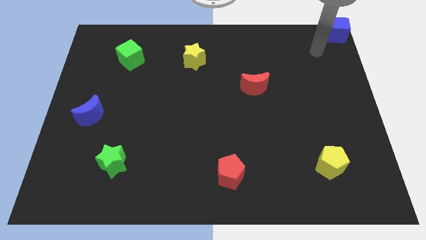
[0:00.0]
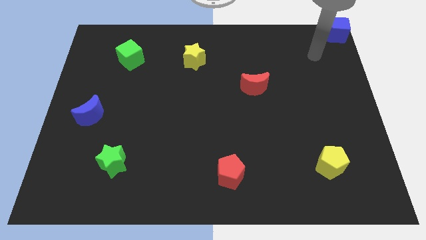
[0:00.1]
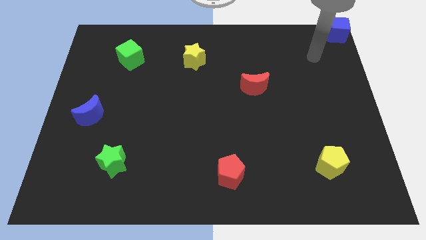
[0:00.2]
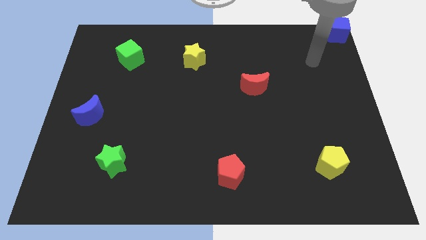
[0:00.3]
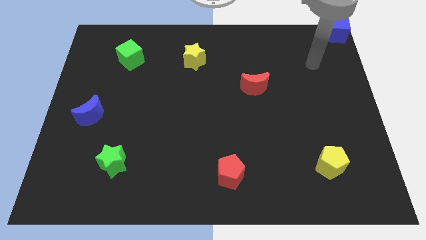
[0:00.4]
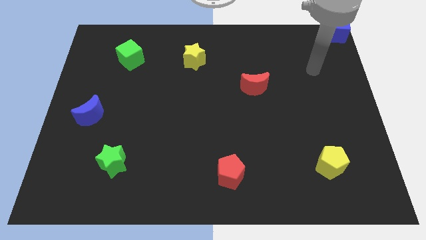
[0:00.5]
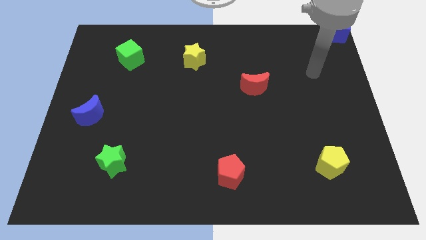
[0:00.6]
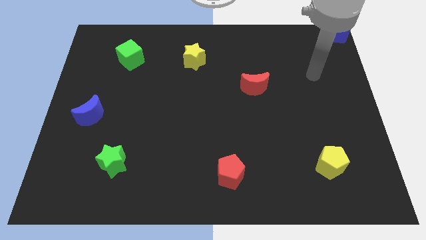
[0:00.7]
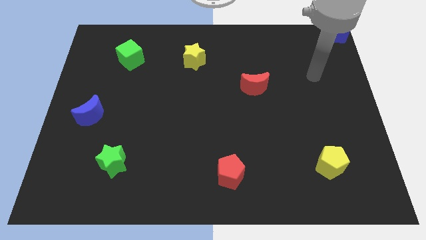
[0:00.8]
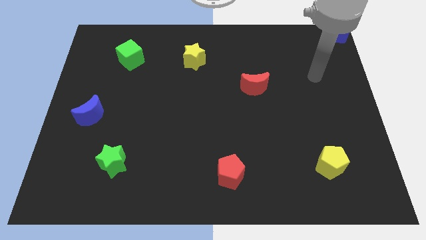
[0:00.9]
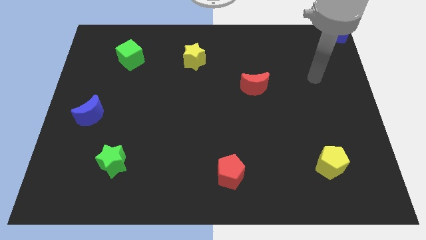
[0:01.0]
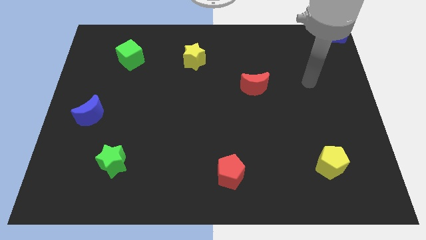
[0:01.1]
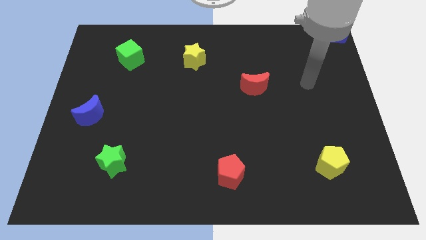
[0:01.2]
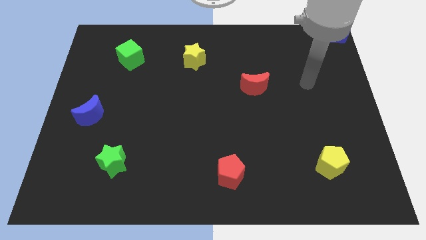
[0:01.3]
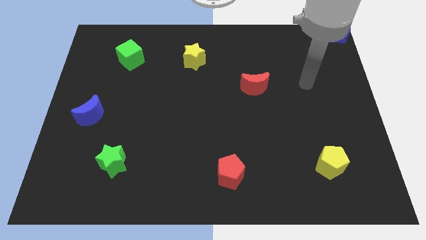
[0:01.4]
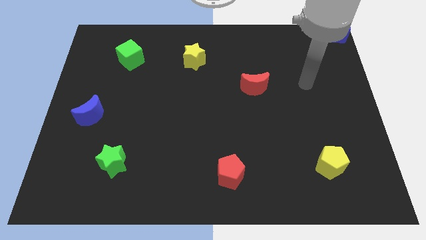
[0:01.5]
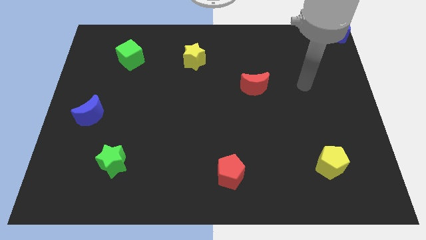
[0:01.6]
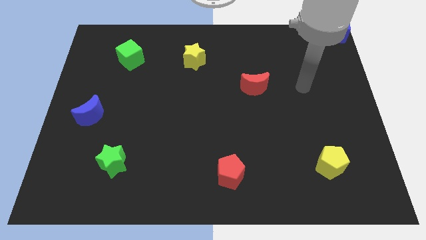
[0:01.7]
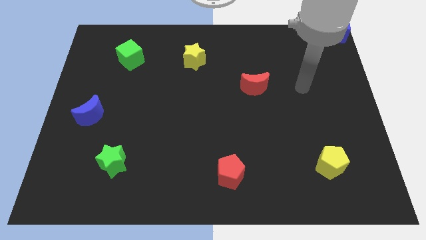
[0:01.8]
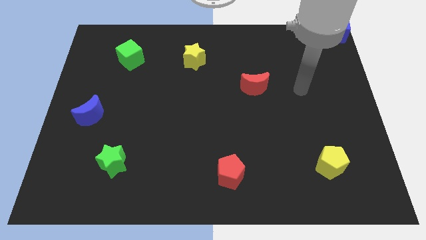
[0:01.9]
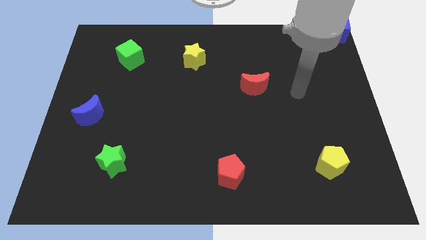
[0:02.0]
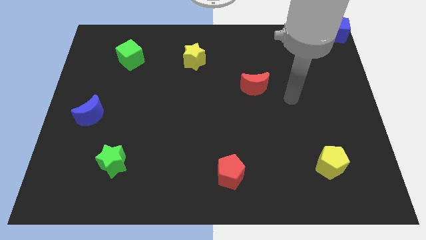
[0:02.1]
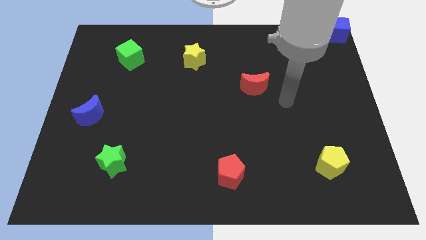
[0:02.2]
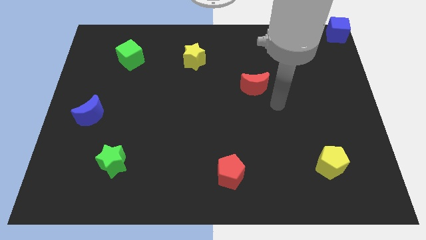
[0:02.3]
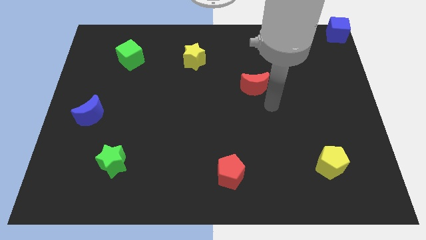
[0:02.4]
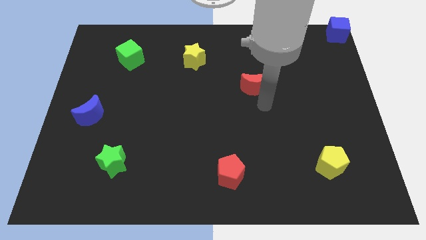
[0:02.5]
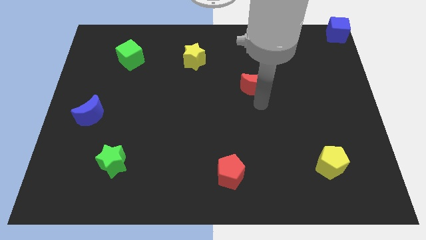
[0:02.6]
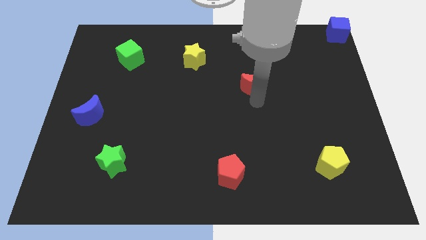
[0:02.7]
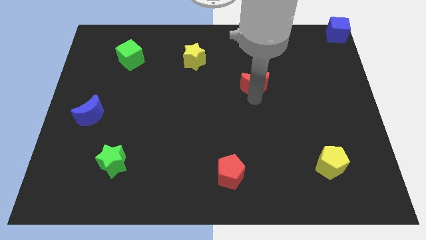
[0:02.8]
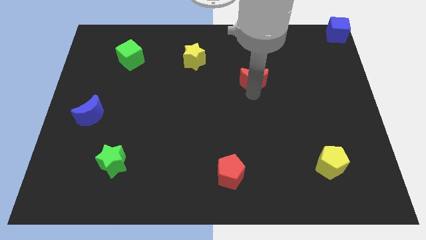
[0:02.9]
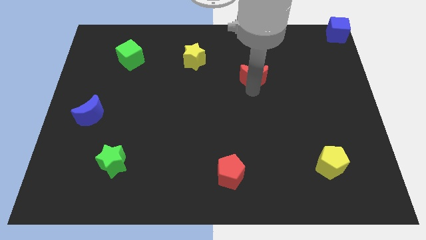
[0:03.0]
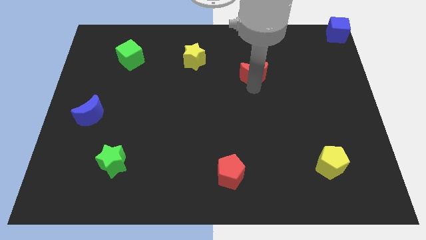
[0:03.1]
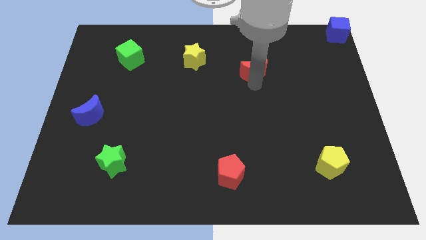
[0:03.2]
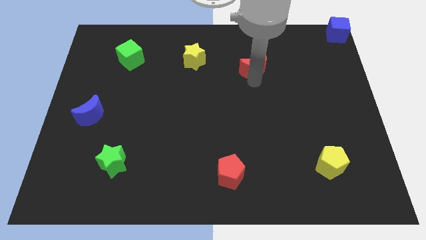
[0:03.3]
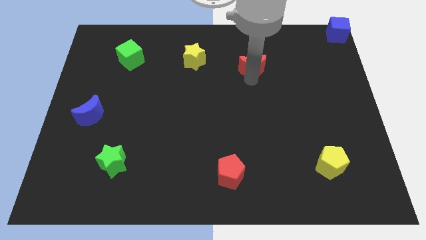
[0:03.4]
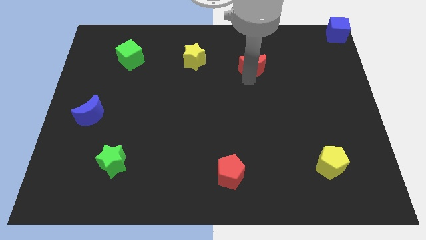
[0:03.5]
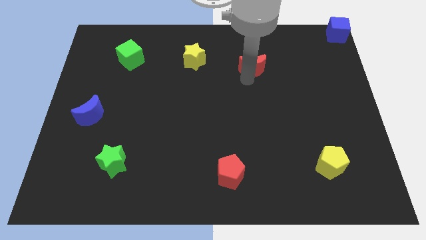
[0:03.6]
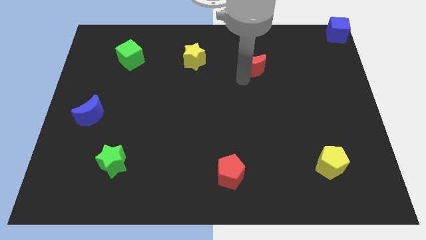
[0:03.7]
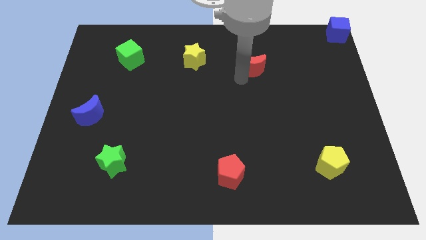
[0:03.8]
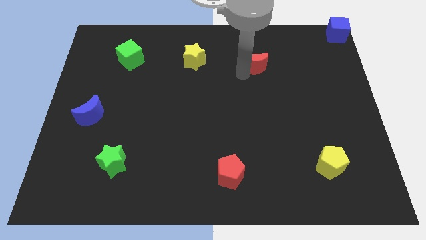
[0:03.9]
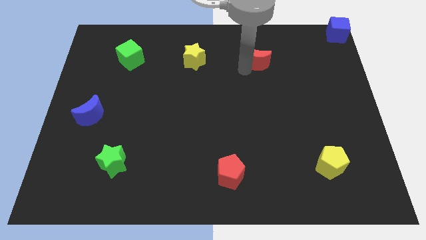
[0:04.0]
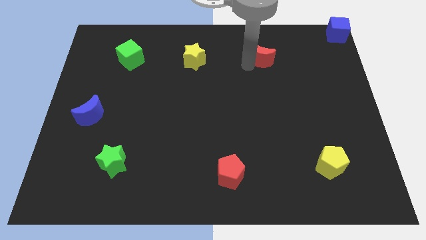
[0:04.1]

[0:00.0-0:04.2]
move the red crescent to the right side of the yellow star

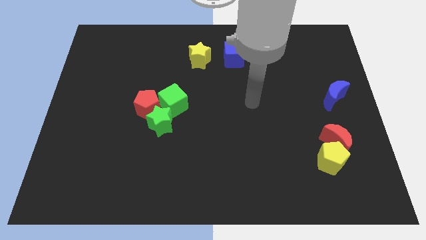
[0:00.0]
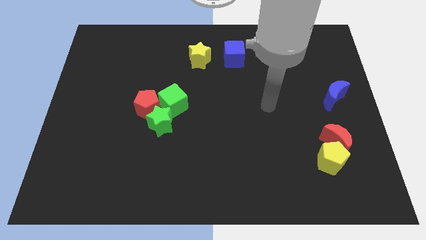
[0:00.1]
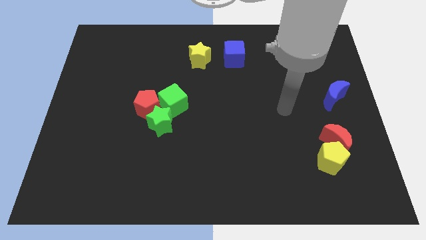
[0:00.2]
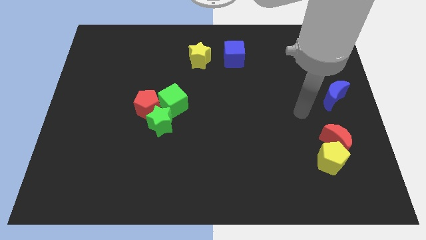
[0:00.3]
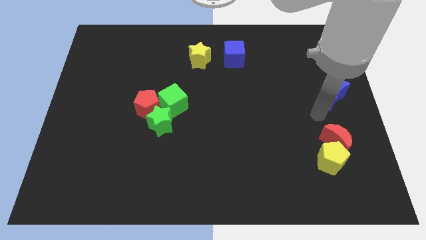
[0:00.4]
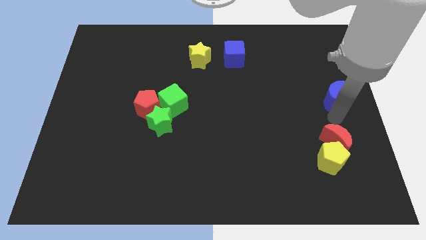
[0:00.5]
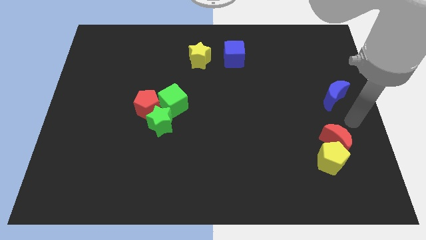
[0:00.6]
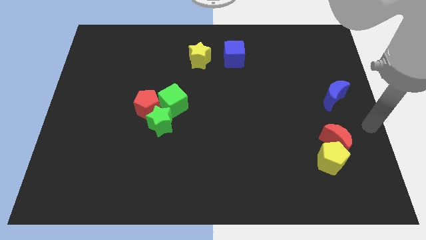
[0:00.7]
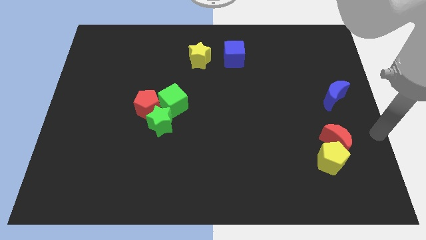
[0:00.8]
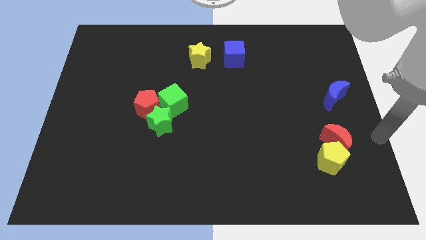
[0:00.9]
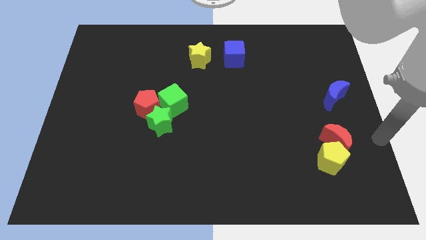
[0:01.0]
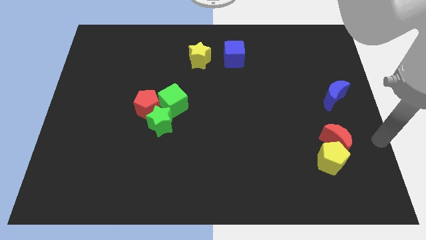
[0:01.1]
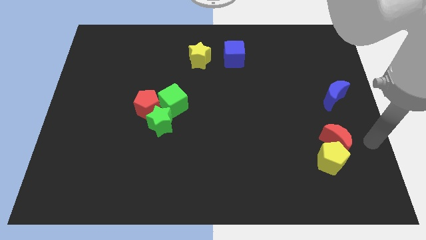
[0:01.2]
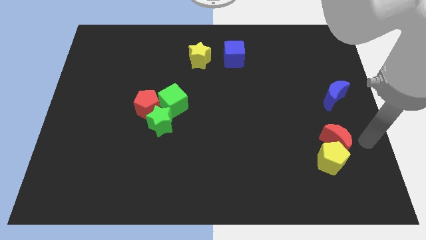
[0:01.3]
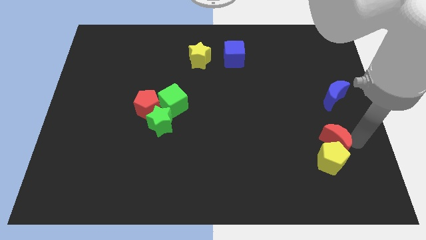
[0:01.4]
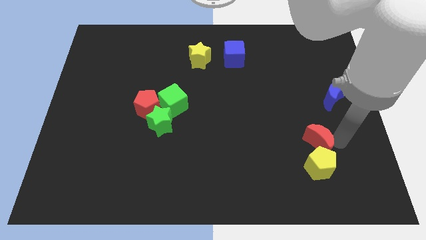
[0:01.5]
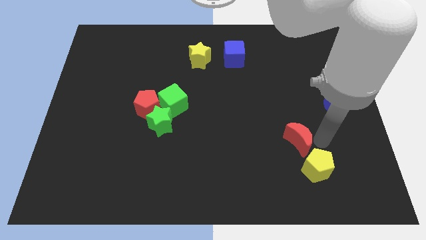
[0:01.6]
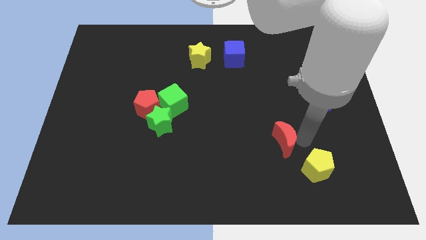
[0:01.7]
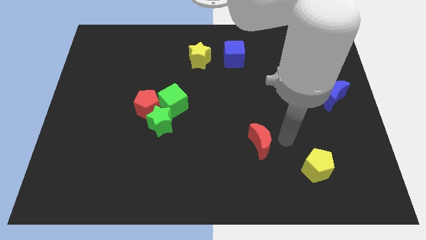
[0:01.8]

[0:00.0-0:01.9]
separate the red moon and yellow pentagon

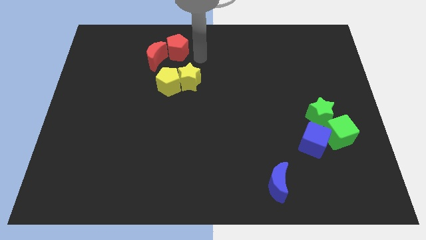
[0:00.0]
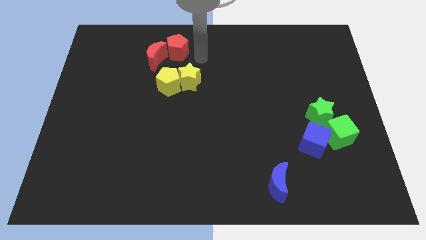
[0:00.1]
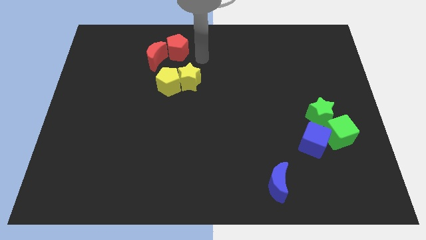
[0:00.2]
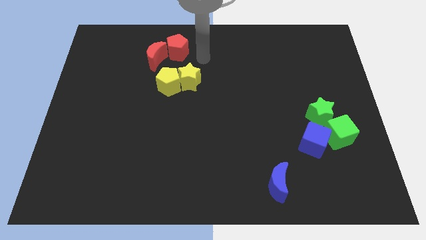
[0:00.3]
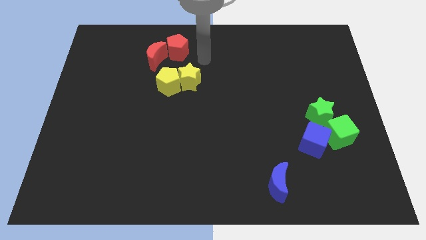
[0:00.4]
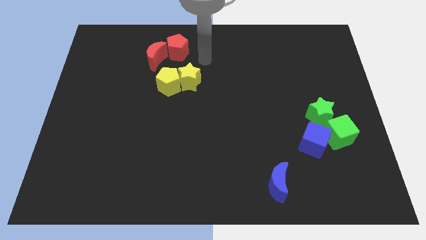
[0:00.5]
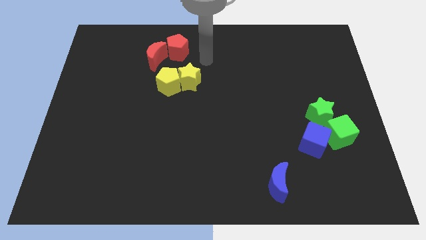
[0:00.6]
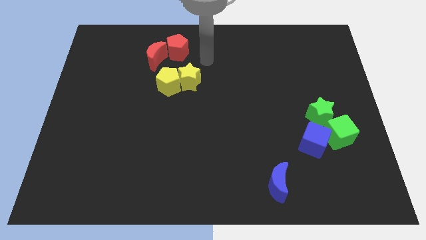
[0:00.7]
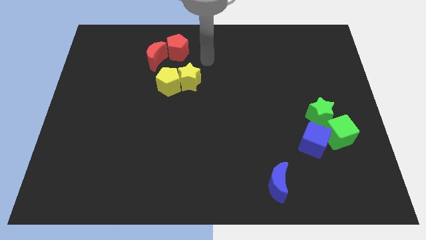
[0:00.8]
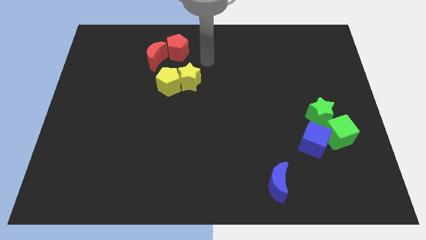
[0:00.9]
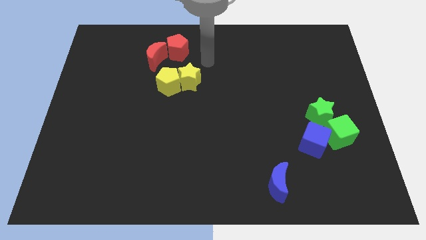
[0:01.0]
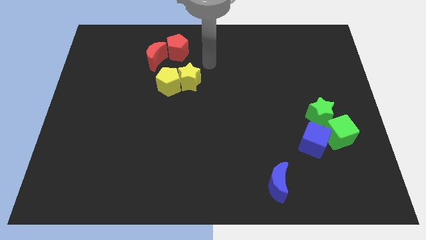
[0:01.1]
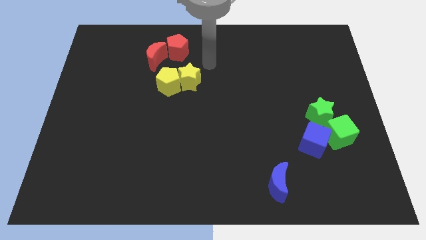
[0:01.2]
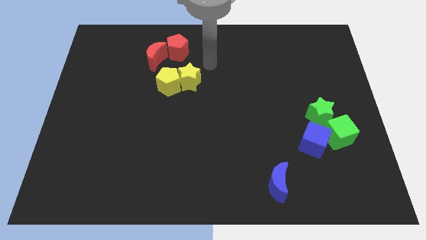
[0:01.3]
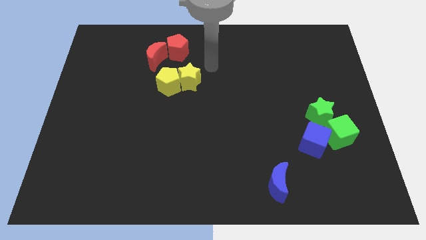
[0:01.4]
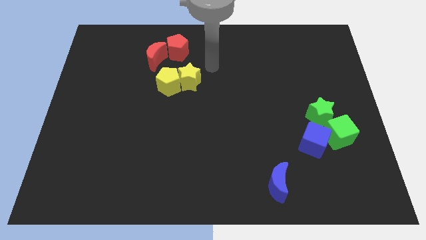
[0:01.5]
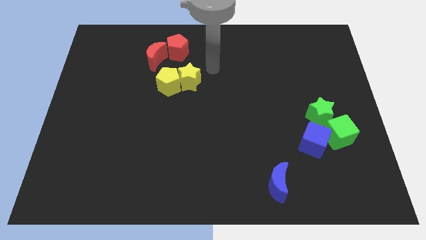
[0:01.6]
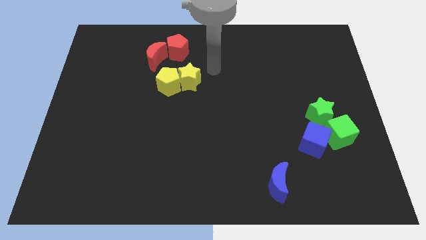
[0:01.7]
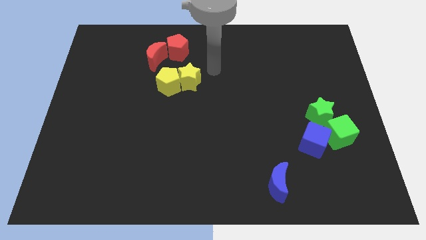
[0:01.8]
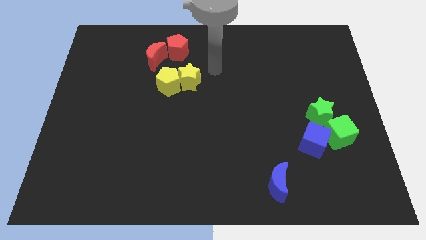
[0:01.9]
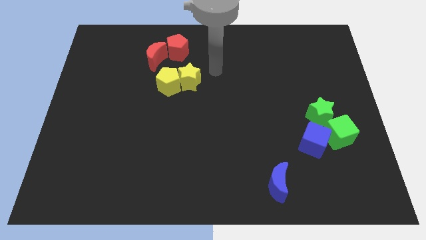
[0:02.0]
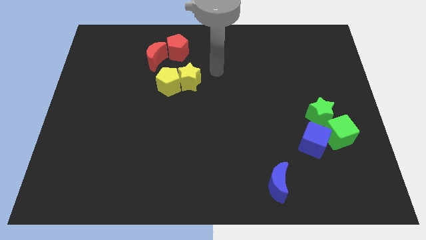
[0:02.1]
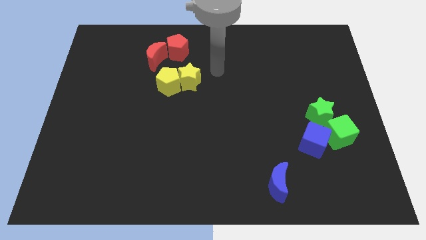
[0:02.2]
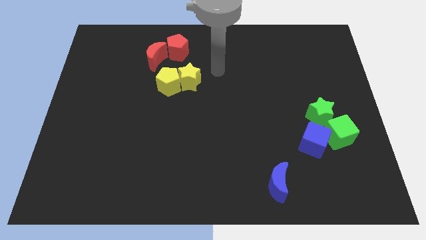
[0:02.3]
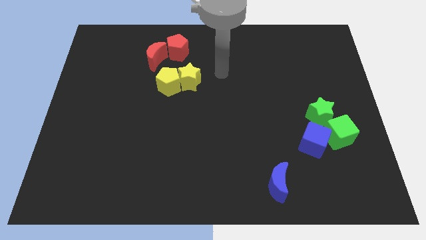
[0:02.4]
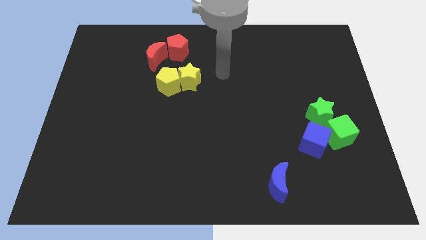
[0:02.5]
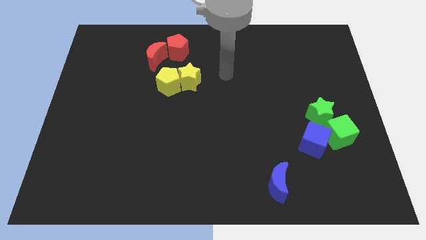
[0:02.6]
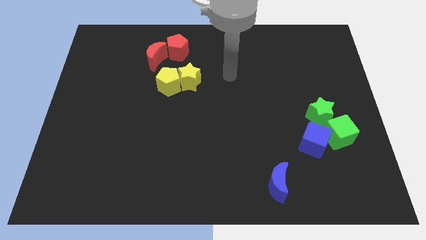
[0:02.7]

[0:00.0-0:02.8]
place your arm to the right side of yellow star

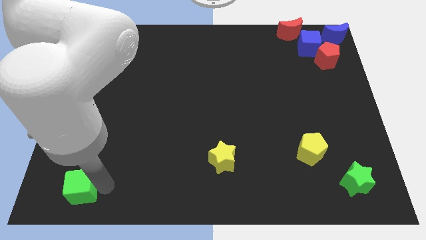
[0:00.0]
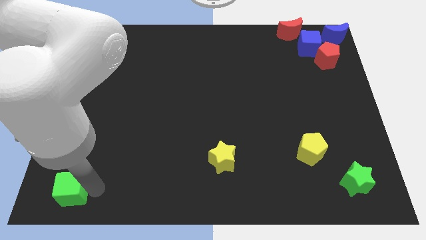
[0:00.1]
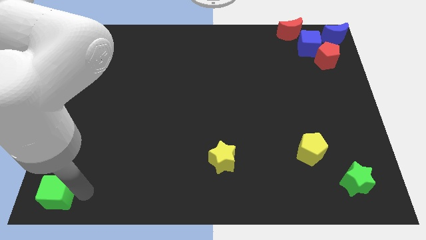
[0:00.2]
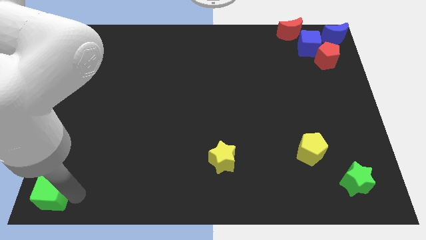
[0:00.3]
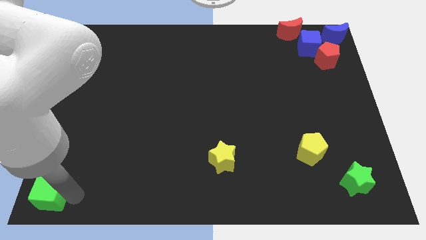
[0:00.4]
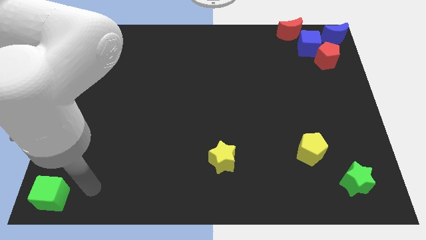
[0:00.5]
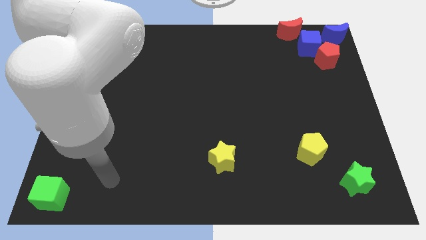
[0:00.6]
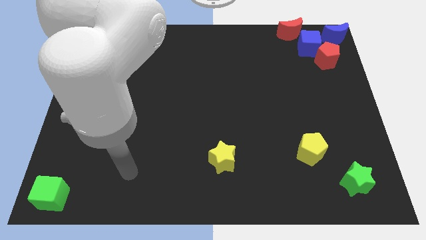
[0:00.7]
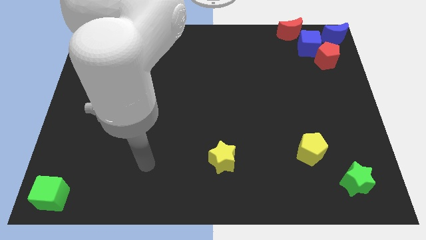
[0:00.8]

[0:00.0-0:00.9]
push the green cube to the bottom left corner of the board
